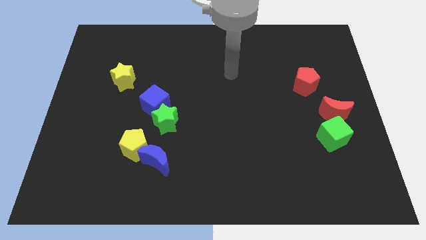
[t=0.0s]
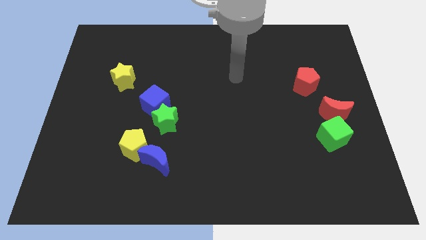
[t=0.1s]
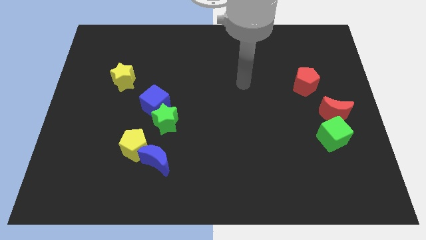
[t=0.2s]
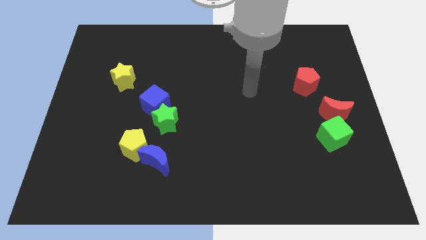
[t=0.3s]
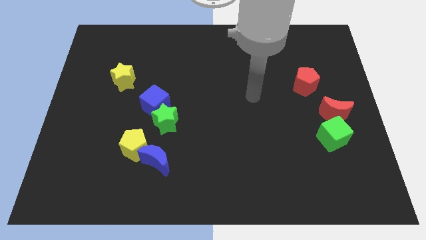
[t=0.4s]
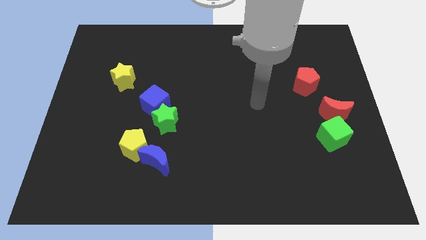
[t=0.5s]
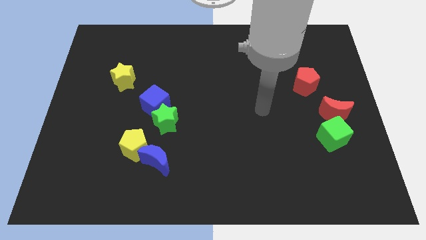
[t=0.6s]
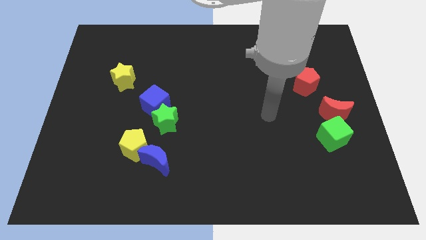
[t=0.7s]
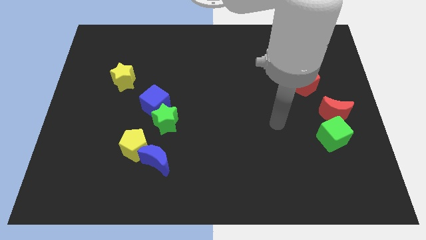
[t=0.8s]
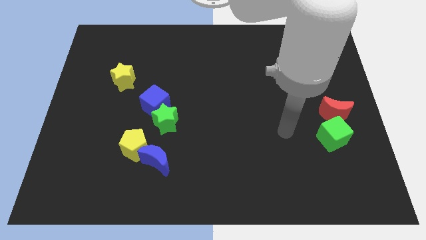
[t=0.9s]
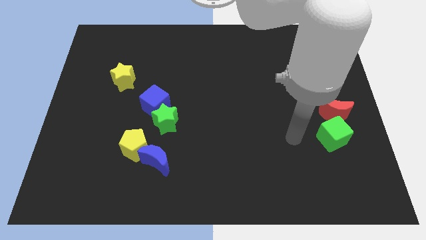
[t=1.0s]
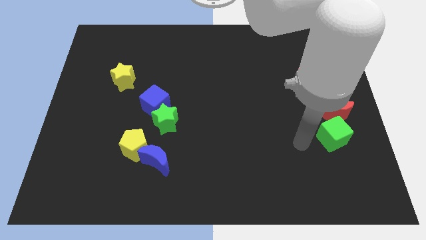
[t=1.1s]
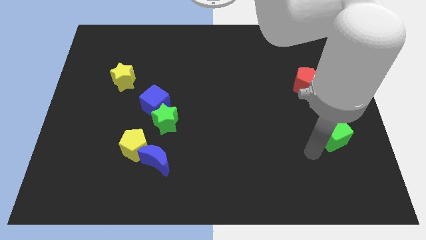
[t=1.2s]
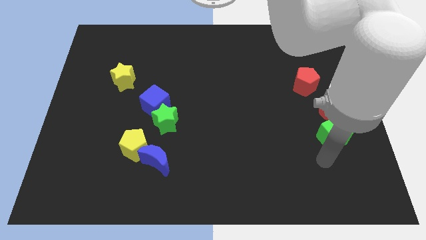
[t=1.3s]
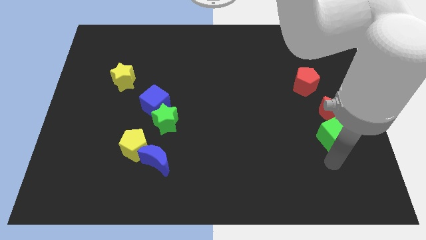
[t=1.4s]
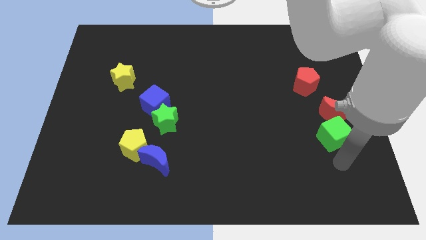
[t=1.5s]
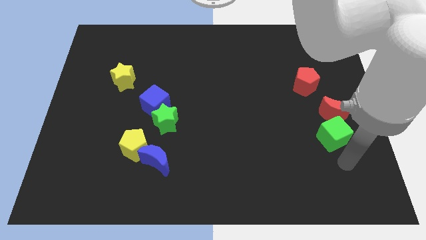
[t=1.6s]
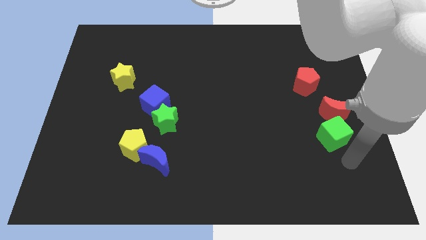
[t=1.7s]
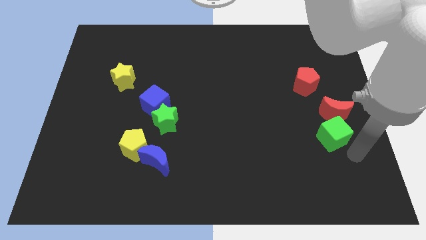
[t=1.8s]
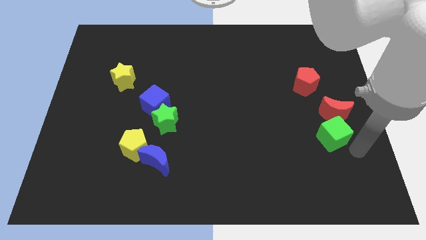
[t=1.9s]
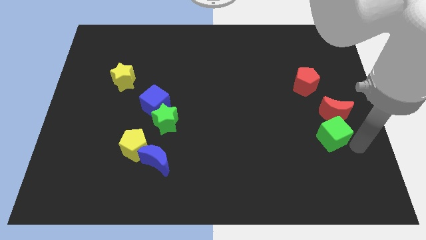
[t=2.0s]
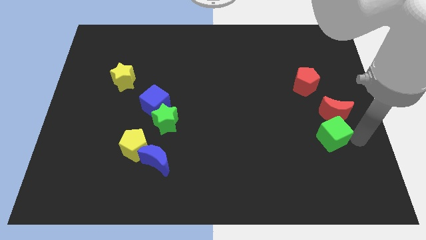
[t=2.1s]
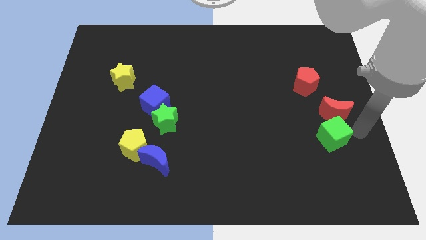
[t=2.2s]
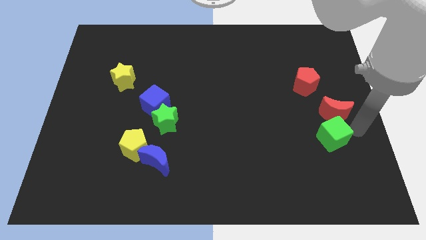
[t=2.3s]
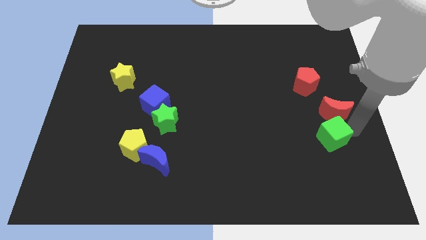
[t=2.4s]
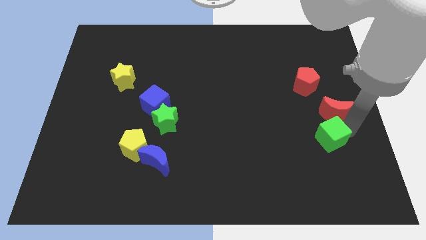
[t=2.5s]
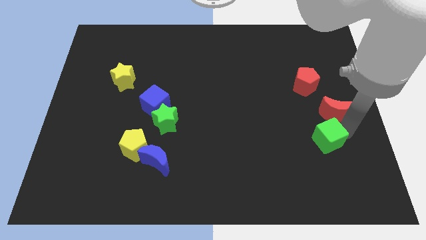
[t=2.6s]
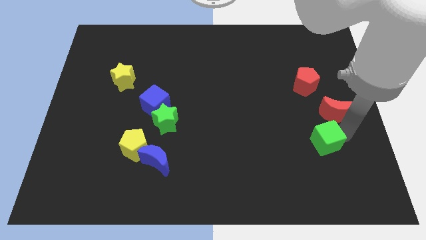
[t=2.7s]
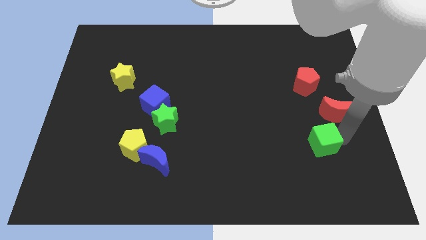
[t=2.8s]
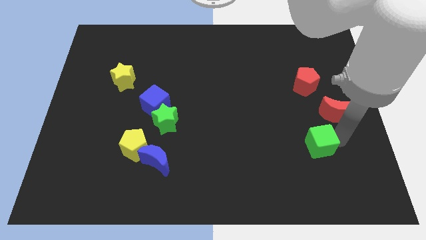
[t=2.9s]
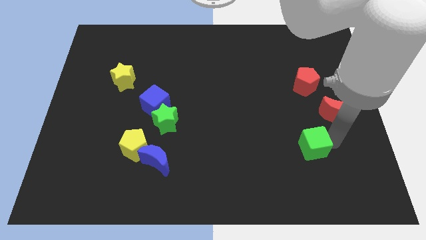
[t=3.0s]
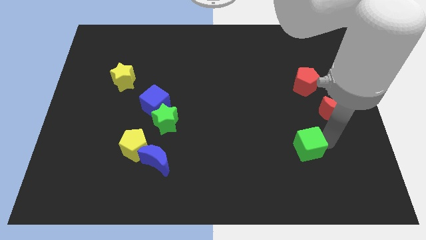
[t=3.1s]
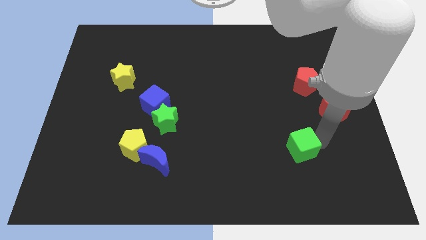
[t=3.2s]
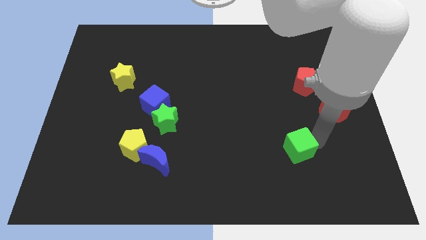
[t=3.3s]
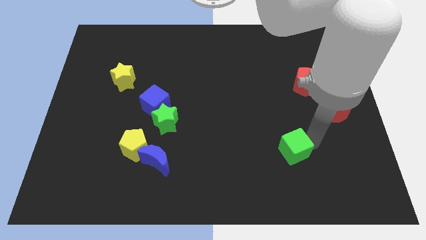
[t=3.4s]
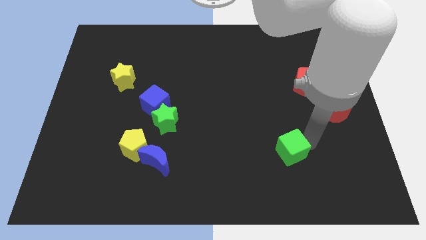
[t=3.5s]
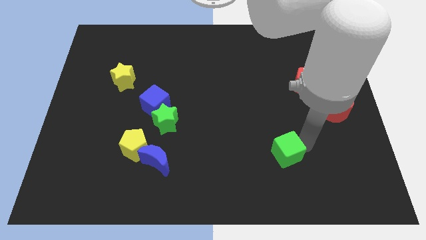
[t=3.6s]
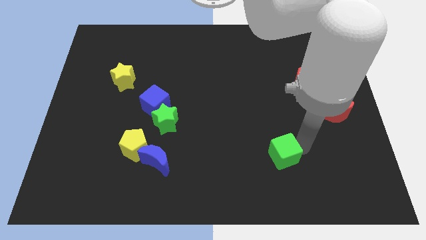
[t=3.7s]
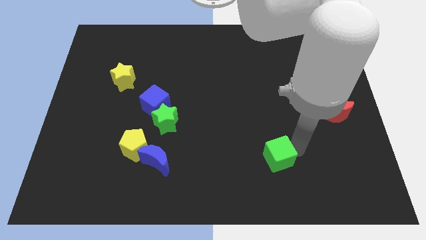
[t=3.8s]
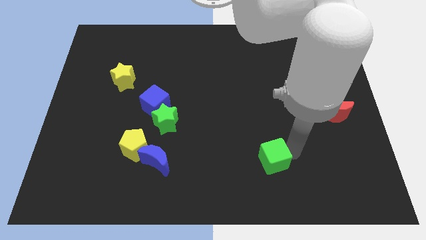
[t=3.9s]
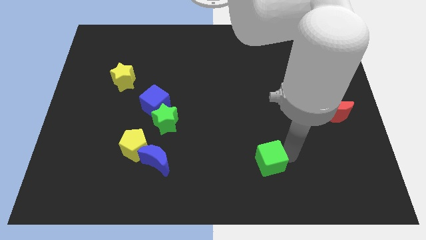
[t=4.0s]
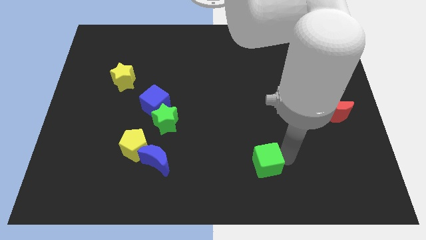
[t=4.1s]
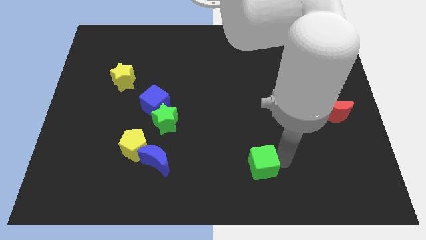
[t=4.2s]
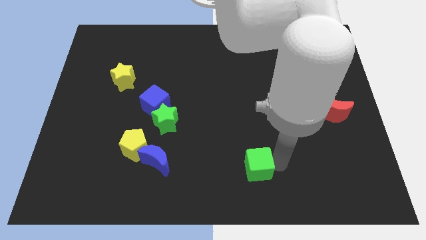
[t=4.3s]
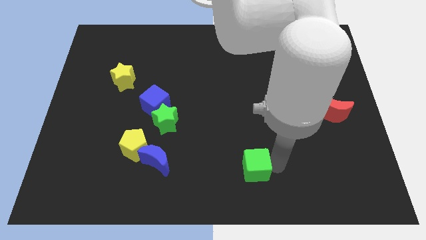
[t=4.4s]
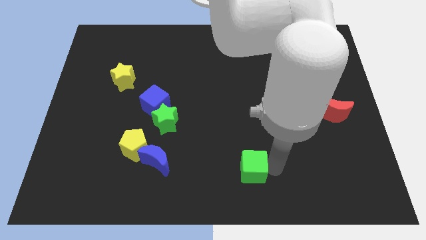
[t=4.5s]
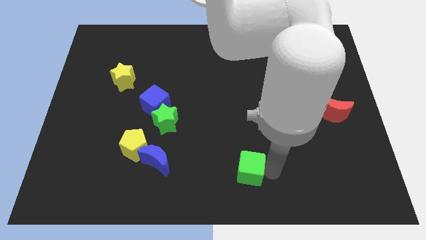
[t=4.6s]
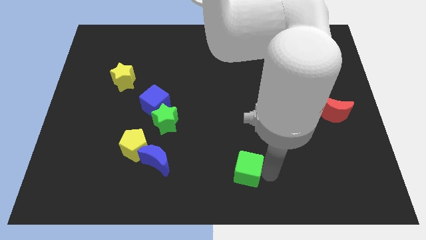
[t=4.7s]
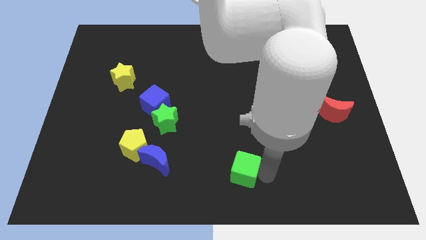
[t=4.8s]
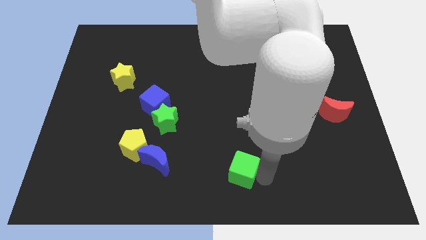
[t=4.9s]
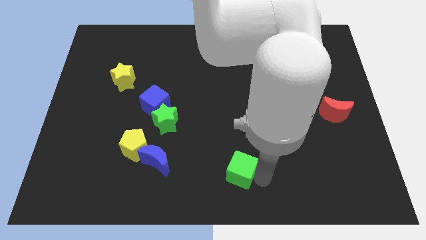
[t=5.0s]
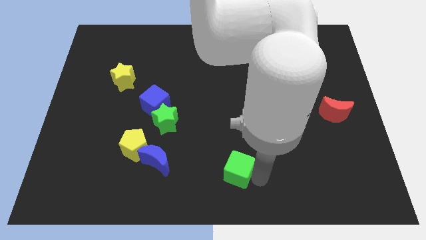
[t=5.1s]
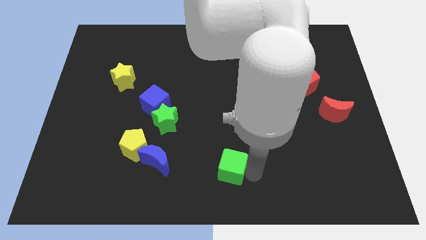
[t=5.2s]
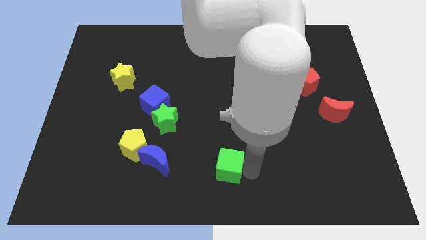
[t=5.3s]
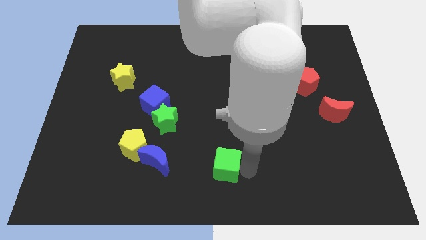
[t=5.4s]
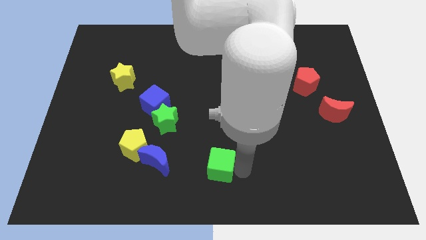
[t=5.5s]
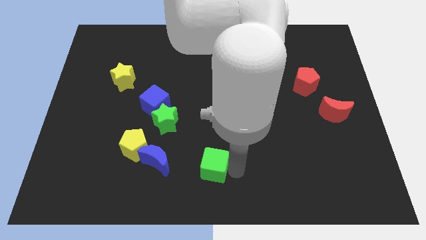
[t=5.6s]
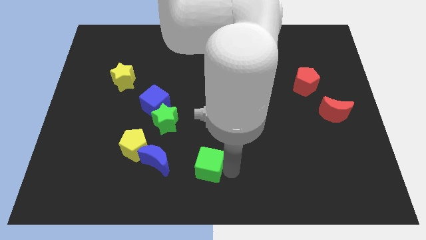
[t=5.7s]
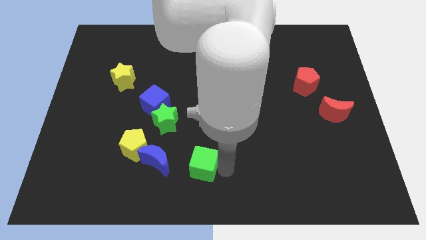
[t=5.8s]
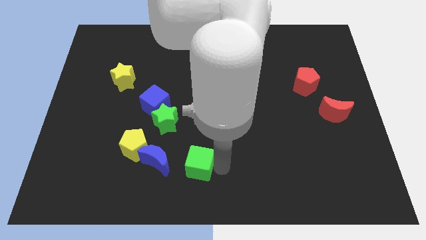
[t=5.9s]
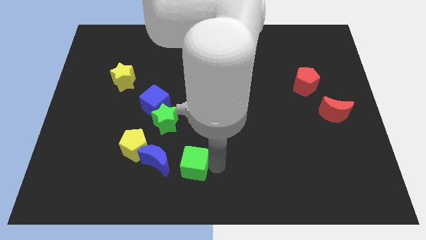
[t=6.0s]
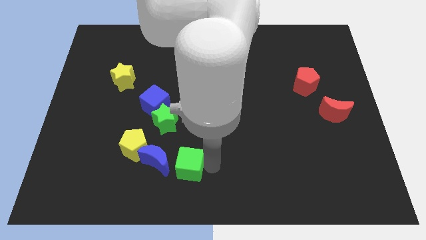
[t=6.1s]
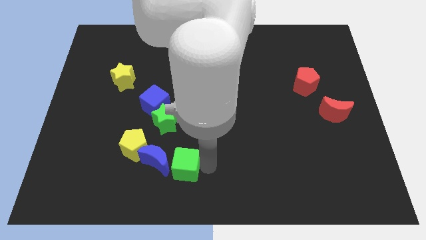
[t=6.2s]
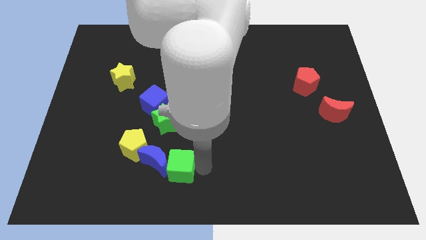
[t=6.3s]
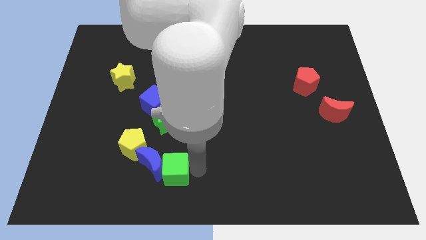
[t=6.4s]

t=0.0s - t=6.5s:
put the green cube next to the blue moon

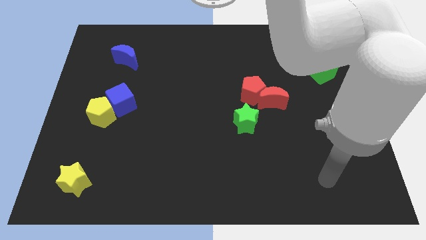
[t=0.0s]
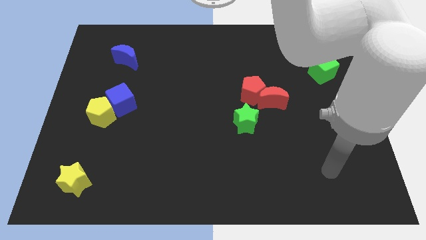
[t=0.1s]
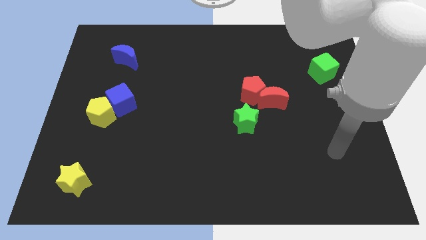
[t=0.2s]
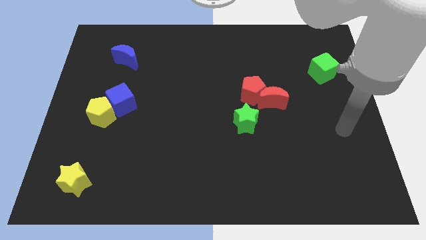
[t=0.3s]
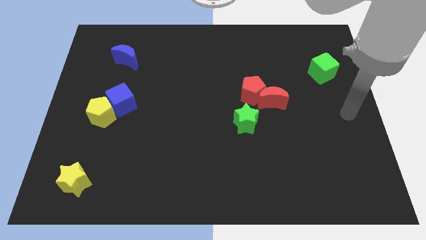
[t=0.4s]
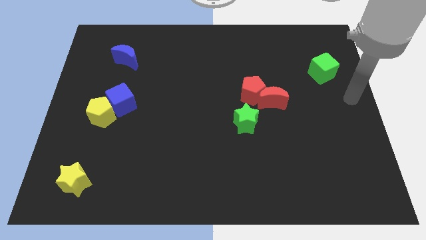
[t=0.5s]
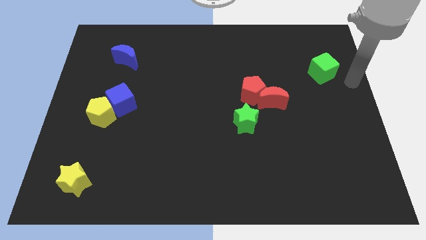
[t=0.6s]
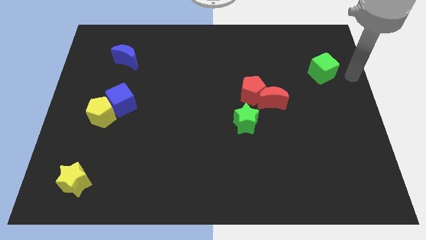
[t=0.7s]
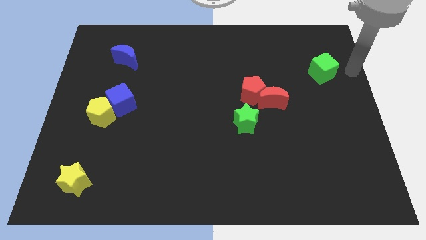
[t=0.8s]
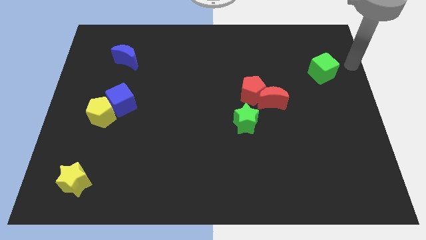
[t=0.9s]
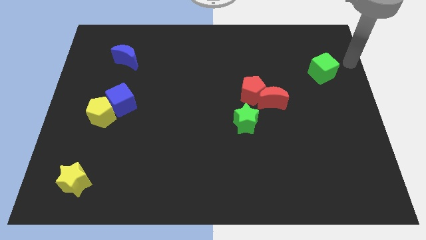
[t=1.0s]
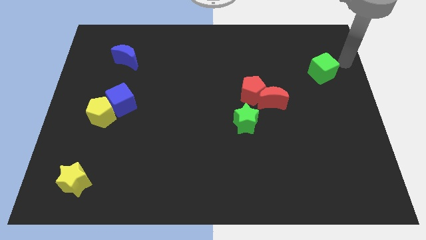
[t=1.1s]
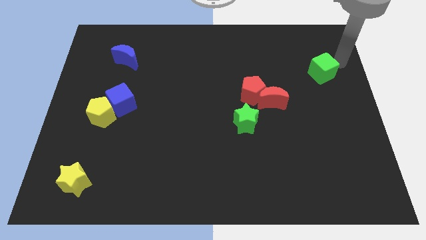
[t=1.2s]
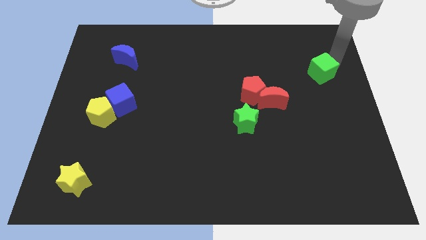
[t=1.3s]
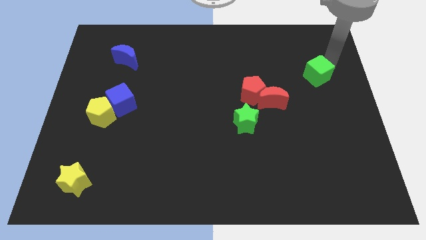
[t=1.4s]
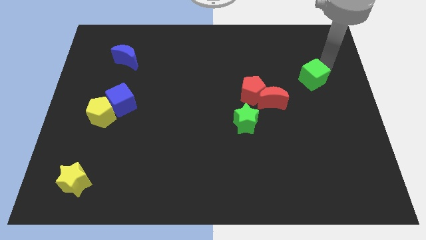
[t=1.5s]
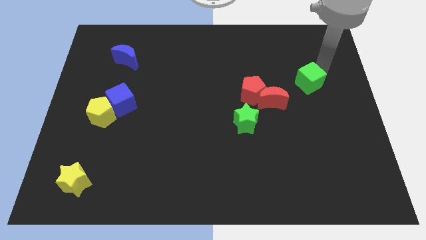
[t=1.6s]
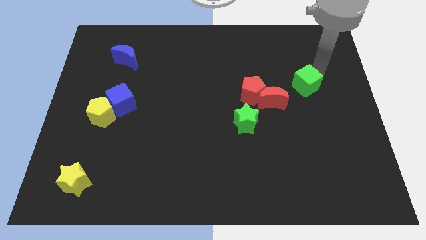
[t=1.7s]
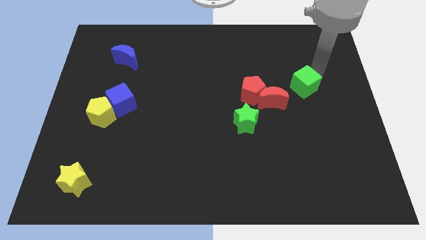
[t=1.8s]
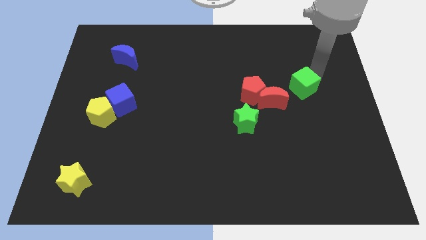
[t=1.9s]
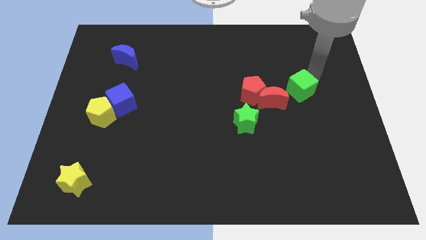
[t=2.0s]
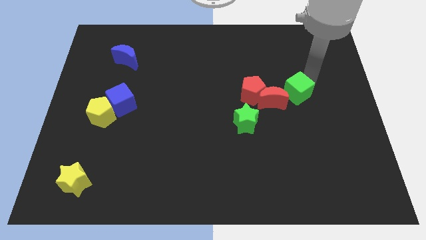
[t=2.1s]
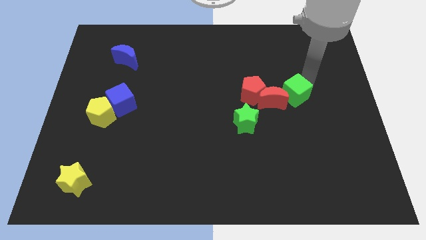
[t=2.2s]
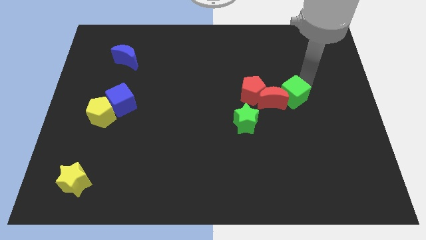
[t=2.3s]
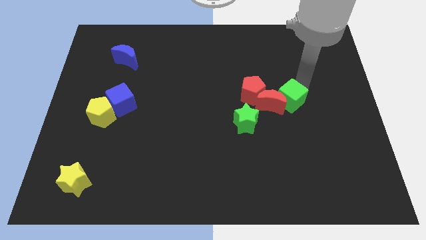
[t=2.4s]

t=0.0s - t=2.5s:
put the green cube close to the red moon
